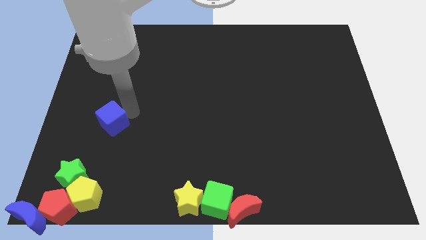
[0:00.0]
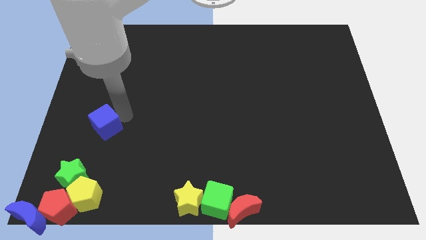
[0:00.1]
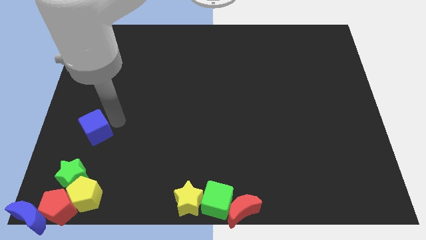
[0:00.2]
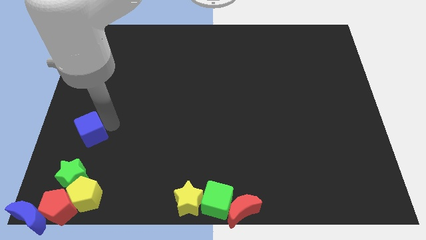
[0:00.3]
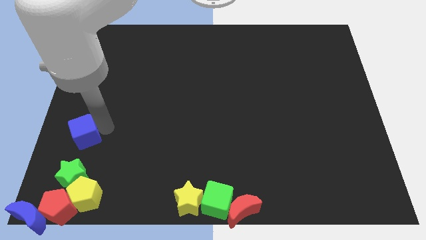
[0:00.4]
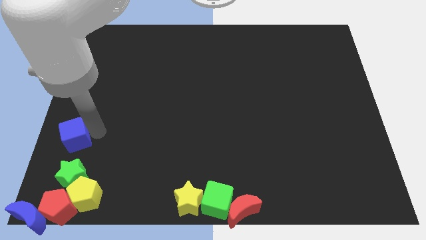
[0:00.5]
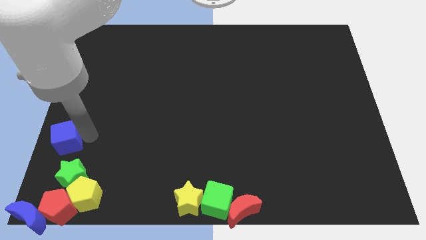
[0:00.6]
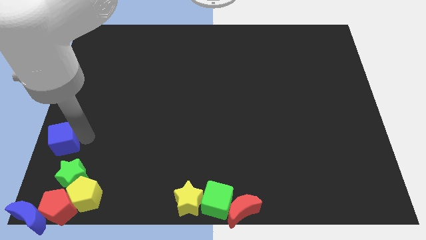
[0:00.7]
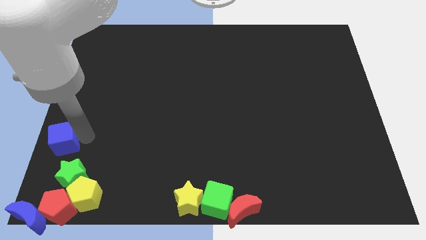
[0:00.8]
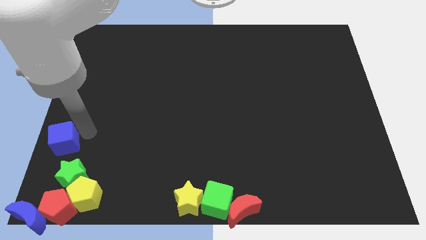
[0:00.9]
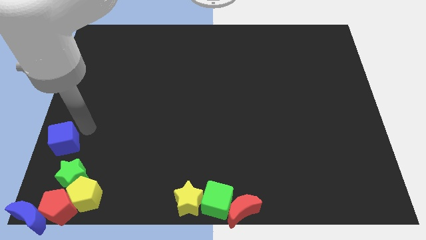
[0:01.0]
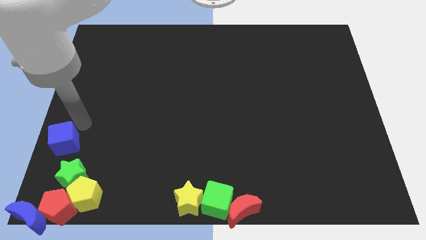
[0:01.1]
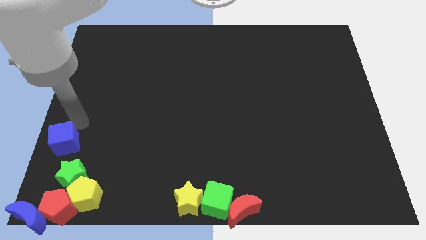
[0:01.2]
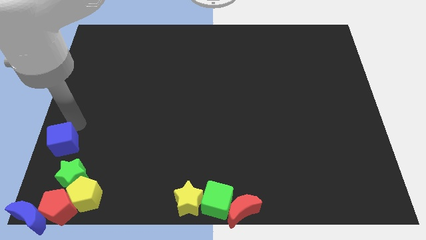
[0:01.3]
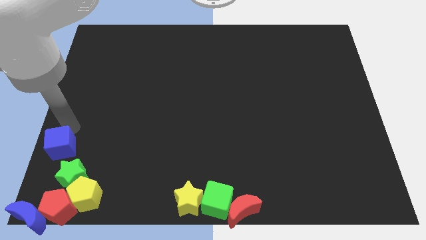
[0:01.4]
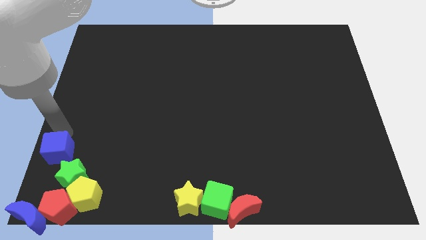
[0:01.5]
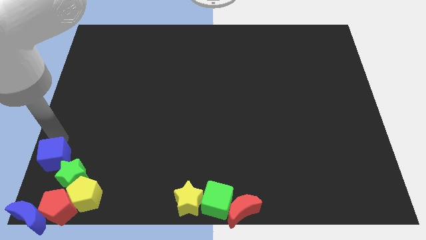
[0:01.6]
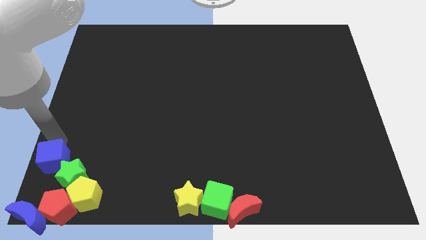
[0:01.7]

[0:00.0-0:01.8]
place the blue cube to the top left of the green star

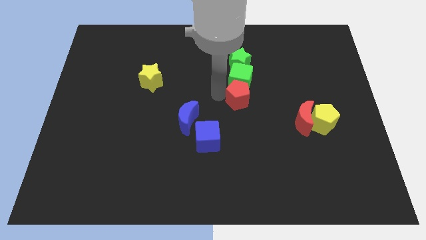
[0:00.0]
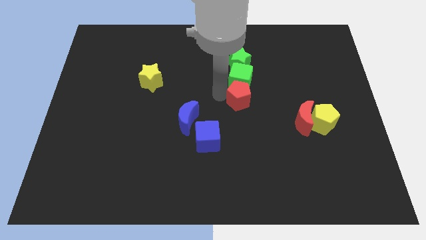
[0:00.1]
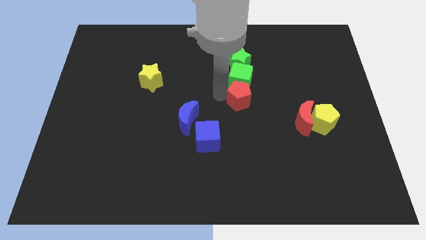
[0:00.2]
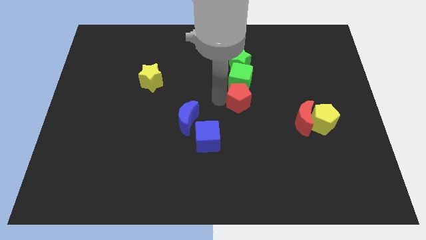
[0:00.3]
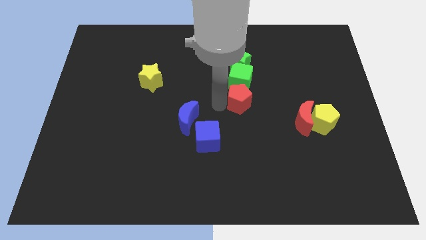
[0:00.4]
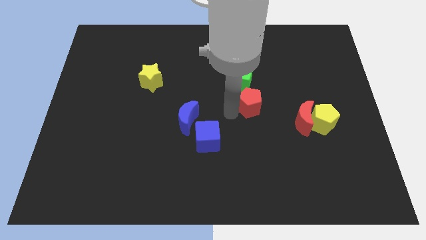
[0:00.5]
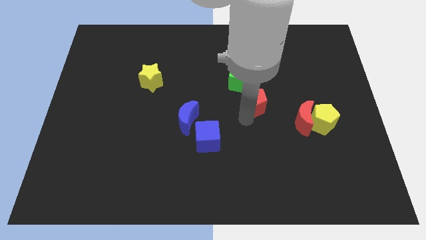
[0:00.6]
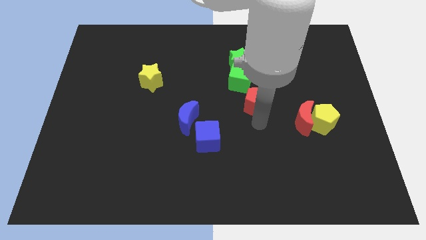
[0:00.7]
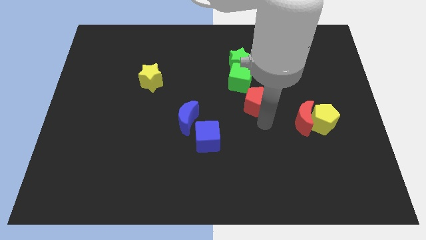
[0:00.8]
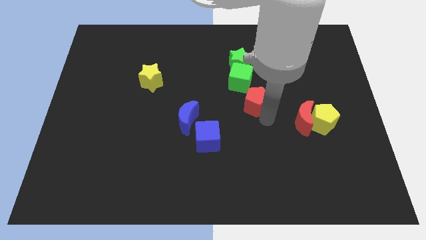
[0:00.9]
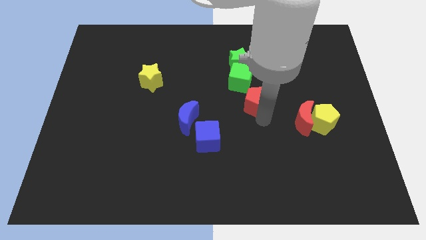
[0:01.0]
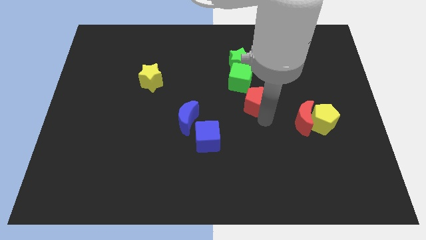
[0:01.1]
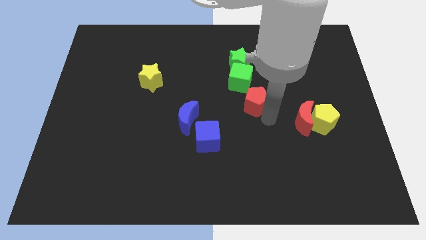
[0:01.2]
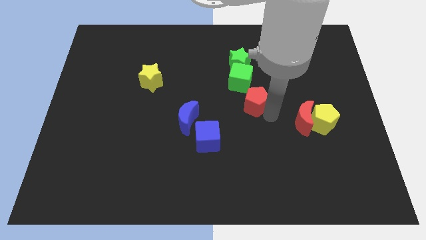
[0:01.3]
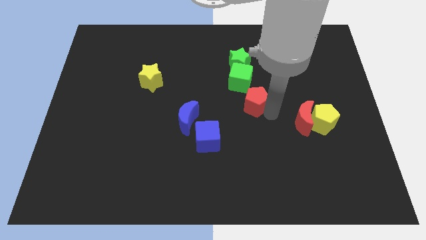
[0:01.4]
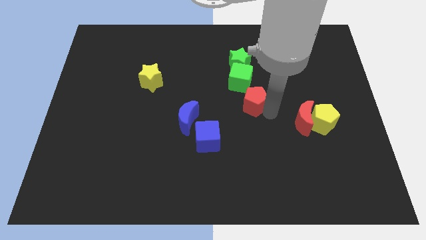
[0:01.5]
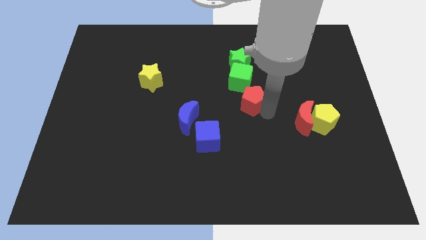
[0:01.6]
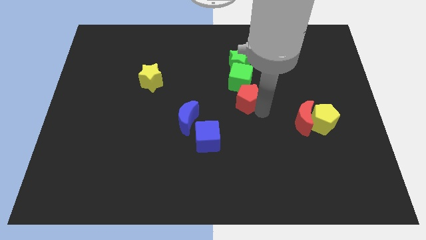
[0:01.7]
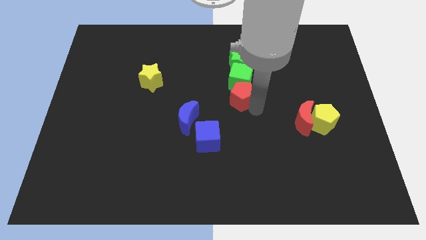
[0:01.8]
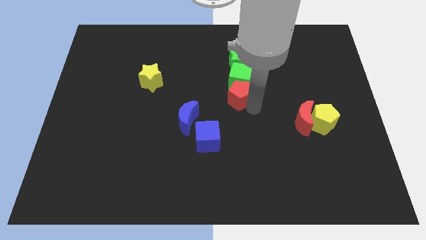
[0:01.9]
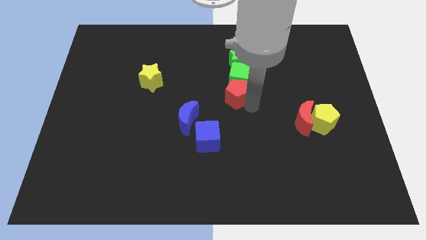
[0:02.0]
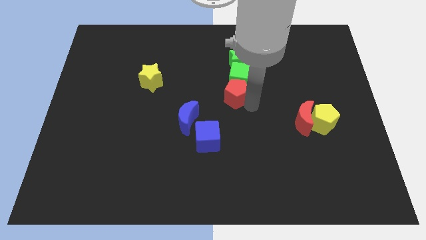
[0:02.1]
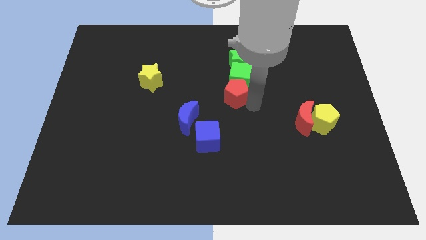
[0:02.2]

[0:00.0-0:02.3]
place the red pentagon vertical below green cube

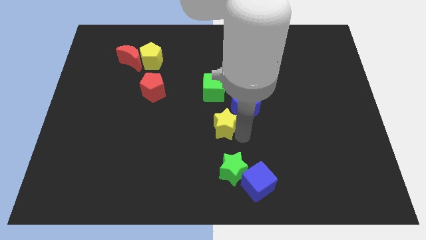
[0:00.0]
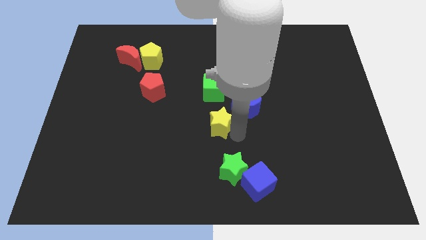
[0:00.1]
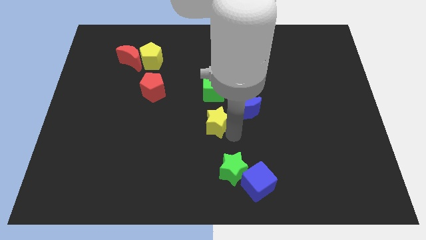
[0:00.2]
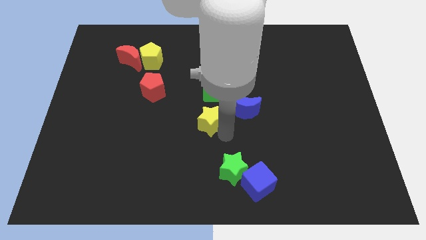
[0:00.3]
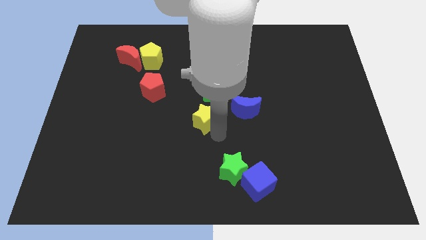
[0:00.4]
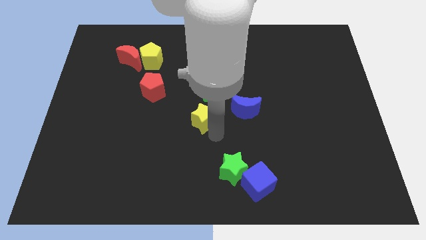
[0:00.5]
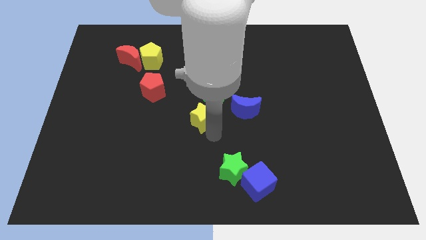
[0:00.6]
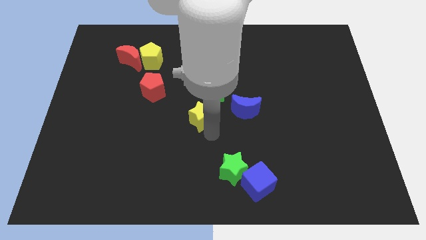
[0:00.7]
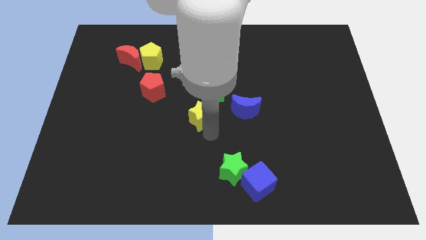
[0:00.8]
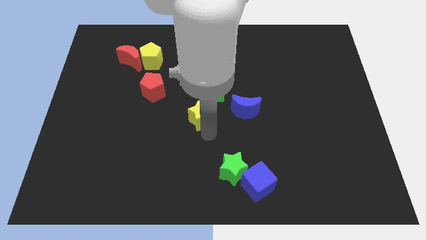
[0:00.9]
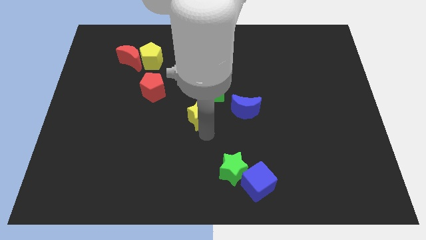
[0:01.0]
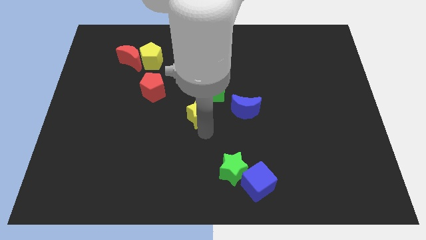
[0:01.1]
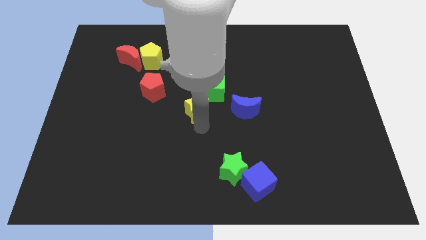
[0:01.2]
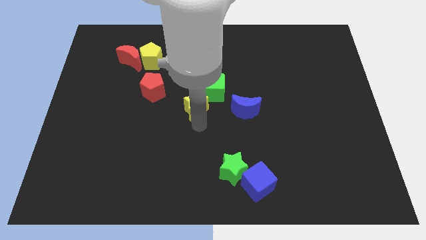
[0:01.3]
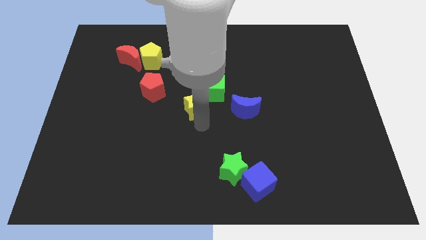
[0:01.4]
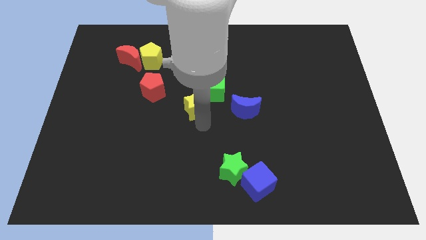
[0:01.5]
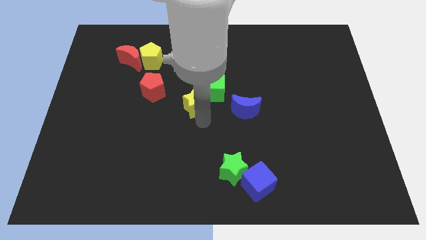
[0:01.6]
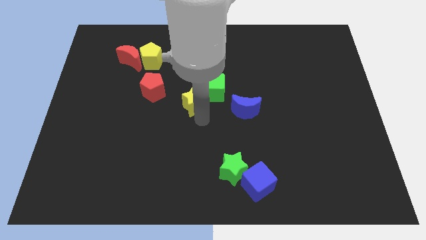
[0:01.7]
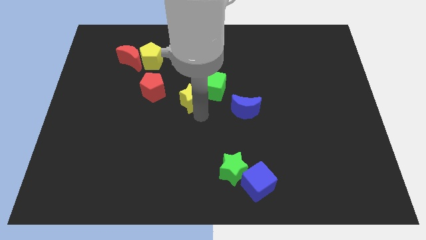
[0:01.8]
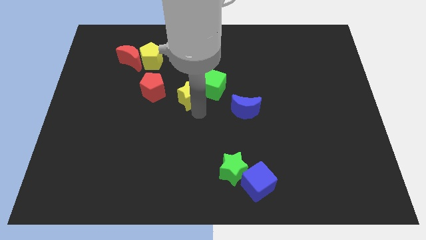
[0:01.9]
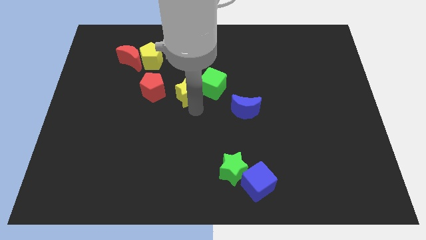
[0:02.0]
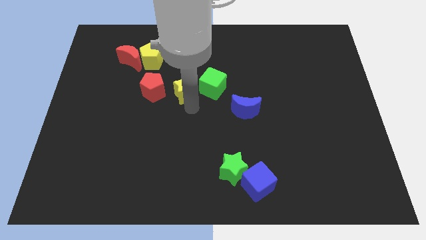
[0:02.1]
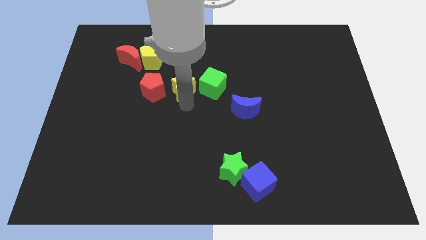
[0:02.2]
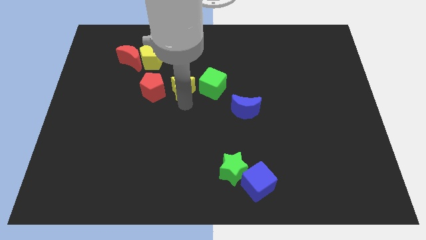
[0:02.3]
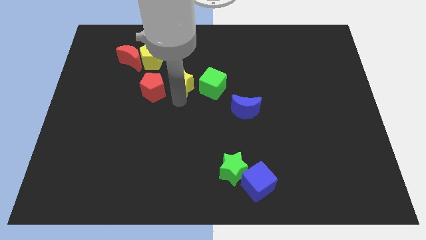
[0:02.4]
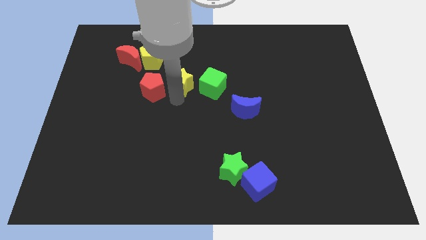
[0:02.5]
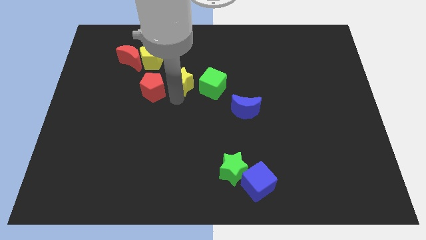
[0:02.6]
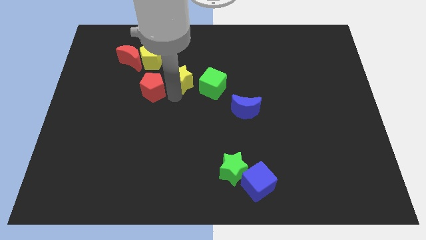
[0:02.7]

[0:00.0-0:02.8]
move the yellow star to the left of the green cube

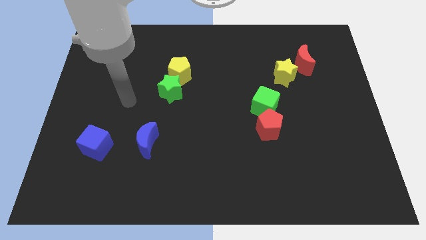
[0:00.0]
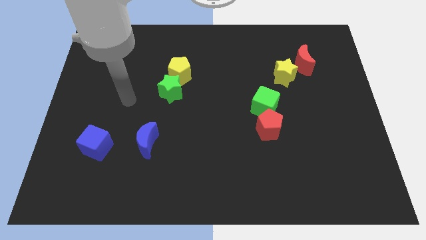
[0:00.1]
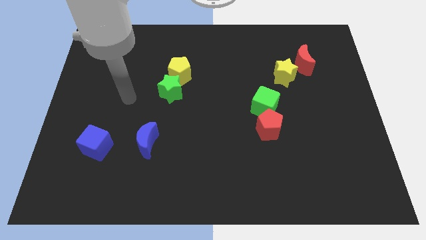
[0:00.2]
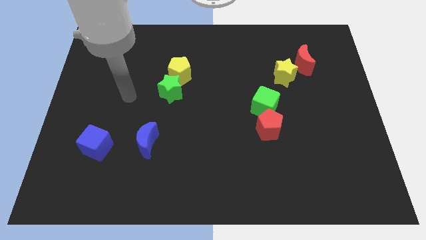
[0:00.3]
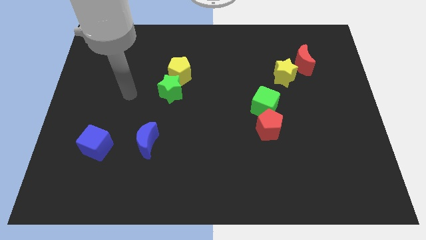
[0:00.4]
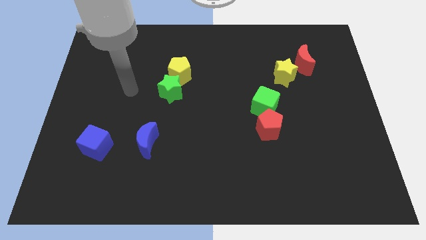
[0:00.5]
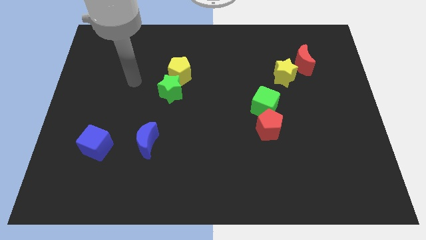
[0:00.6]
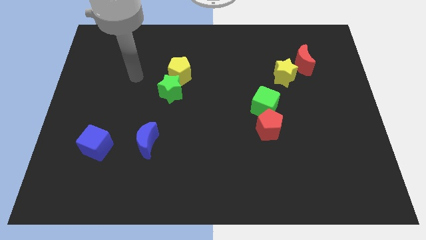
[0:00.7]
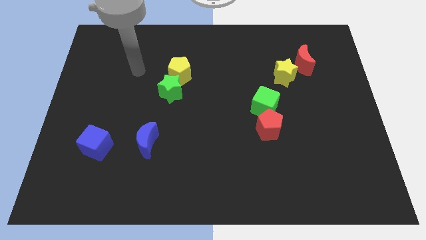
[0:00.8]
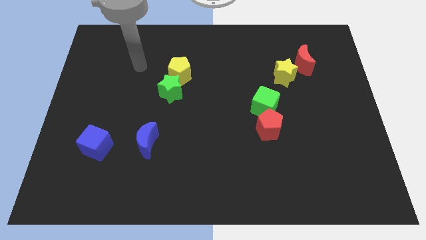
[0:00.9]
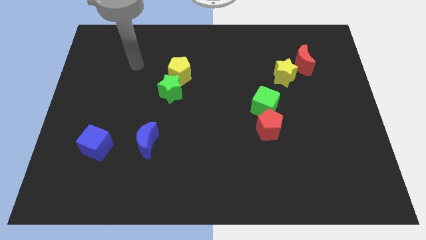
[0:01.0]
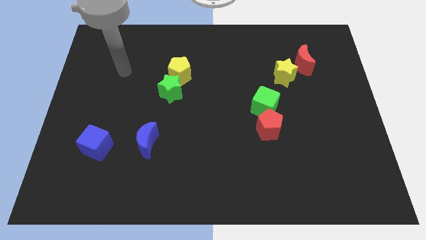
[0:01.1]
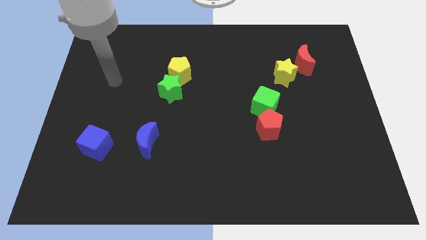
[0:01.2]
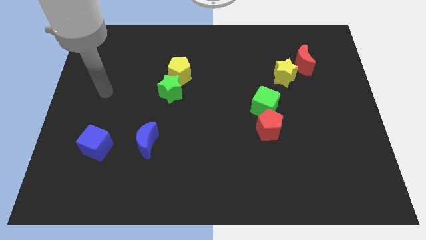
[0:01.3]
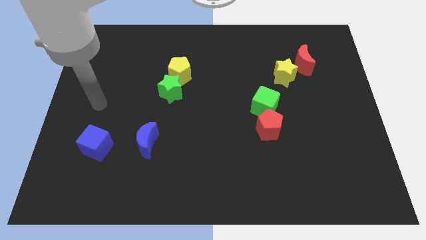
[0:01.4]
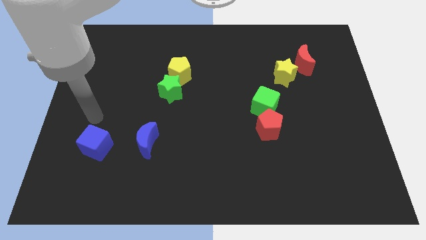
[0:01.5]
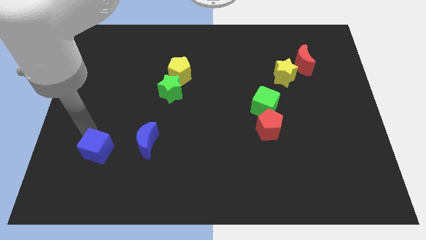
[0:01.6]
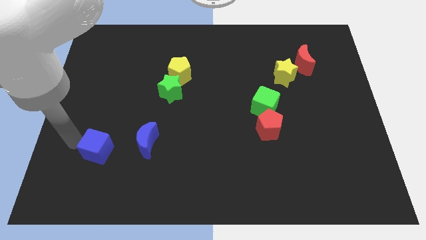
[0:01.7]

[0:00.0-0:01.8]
tap the blue square

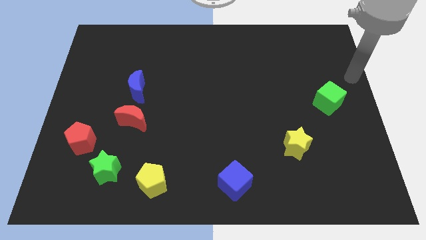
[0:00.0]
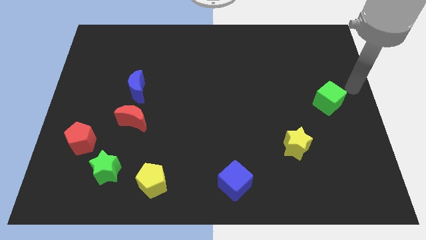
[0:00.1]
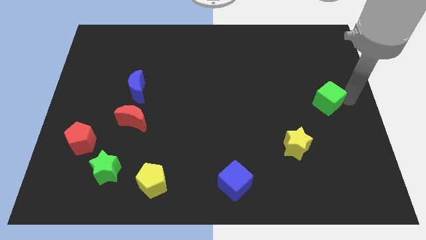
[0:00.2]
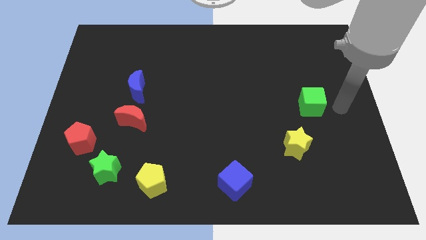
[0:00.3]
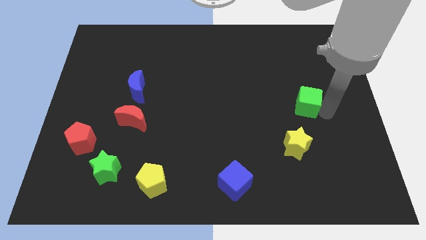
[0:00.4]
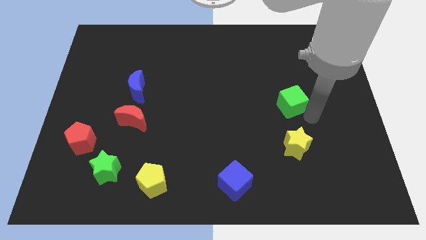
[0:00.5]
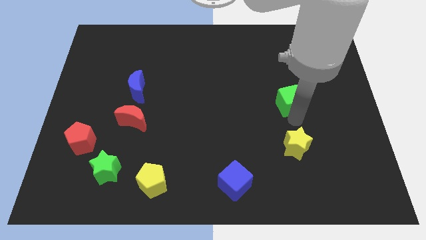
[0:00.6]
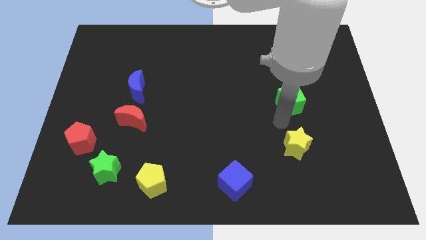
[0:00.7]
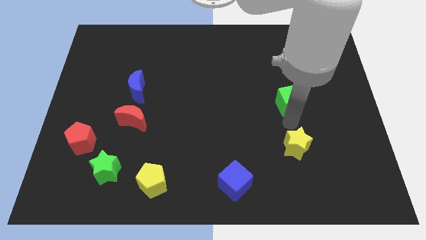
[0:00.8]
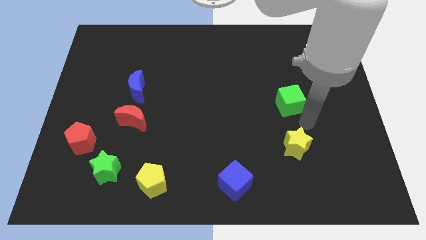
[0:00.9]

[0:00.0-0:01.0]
place the green cube diagonally top left of yellow star
